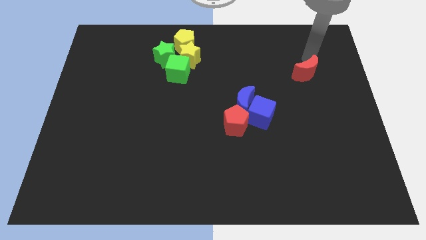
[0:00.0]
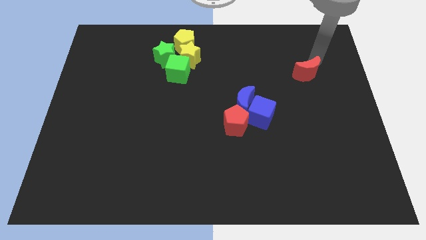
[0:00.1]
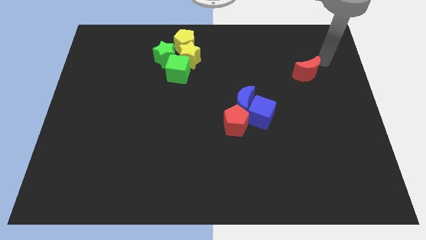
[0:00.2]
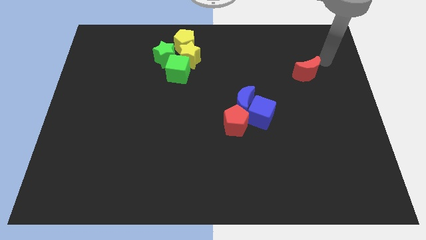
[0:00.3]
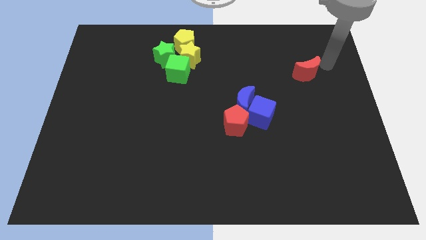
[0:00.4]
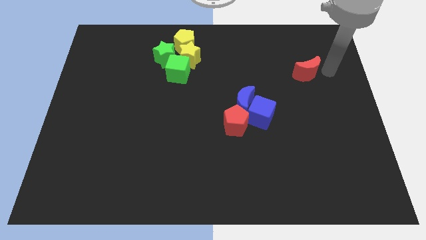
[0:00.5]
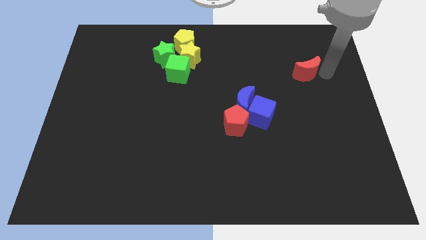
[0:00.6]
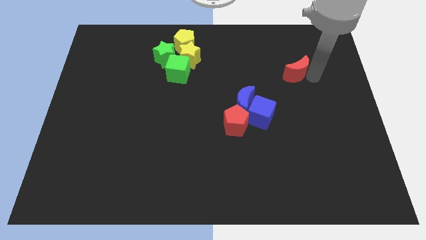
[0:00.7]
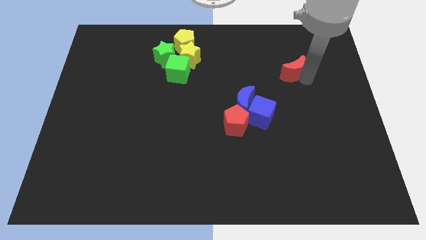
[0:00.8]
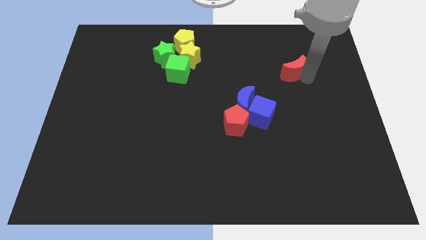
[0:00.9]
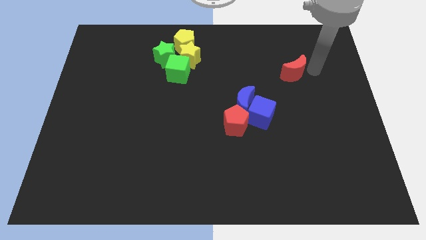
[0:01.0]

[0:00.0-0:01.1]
move red crescent towards blue crescent

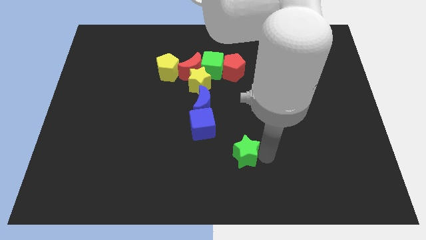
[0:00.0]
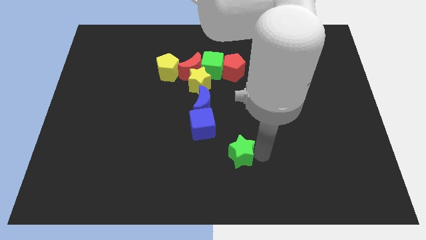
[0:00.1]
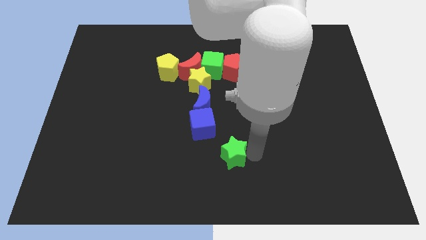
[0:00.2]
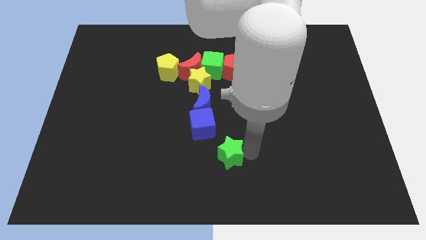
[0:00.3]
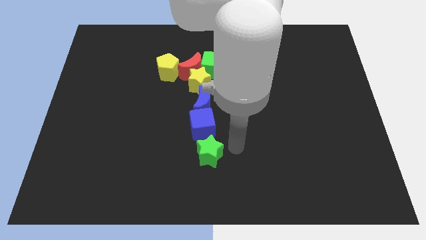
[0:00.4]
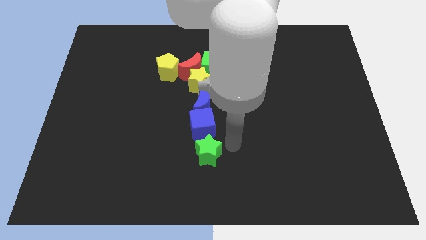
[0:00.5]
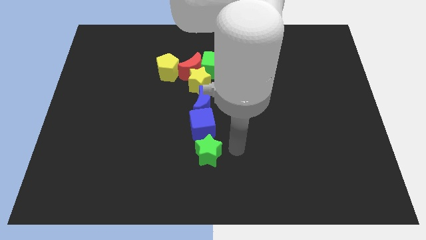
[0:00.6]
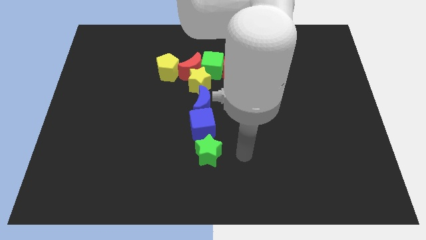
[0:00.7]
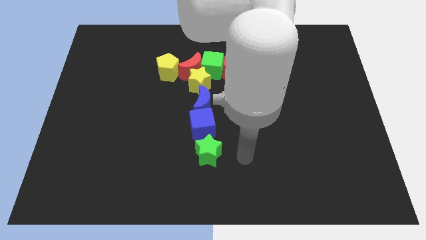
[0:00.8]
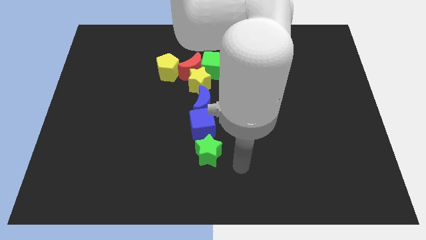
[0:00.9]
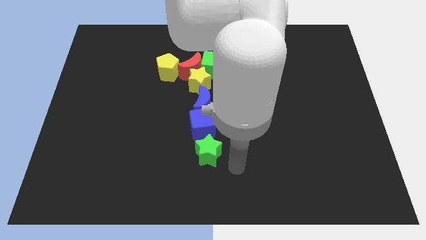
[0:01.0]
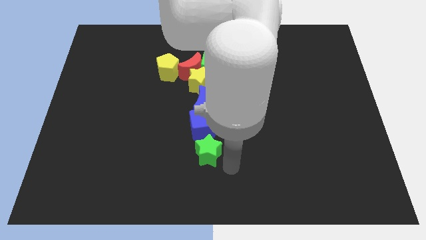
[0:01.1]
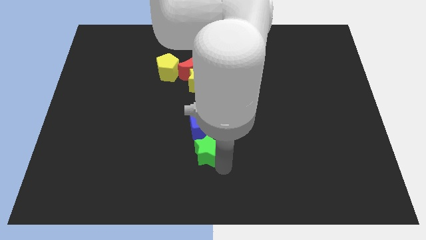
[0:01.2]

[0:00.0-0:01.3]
place green star below blue cube

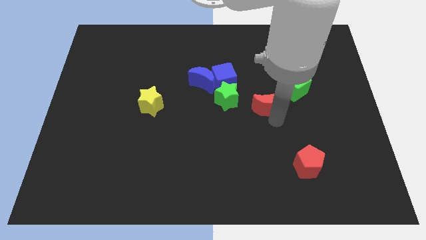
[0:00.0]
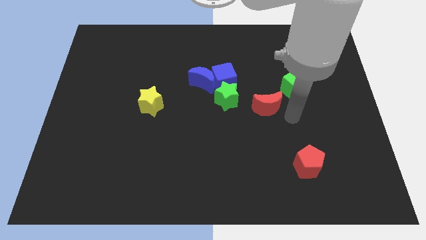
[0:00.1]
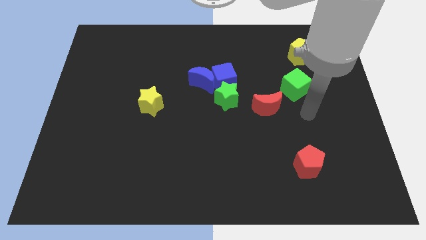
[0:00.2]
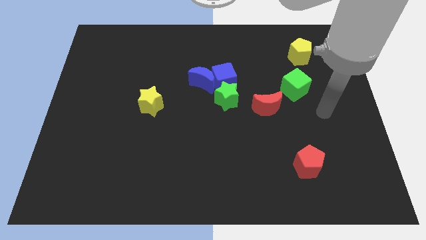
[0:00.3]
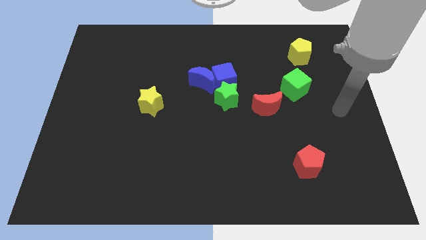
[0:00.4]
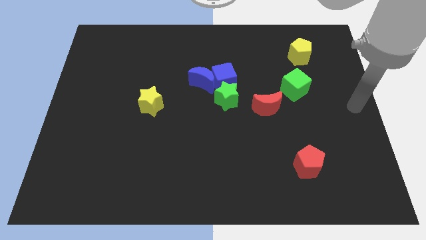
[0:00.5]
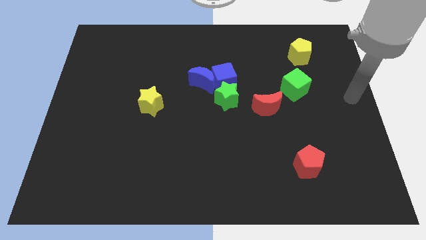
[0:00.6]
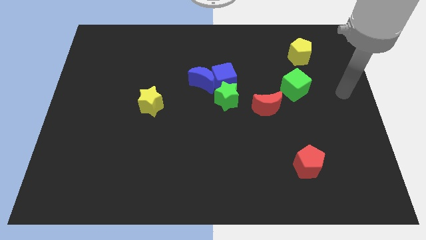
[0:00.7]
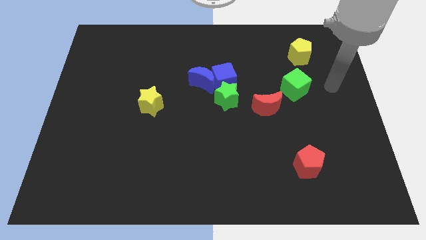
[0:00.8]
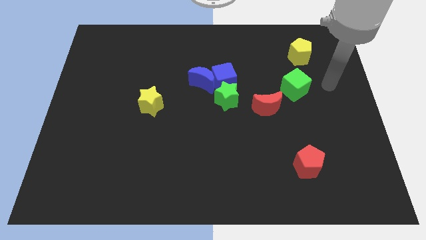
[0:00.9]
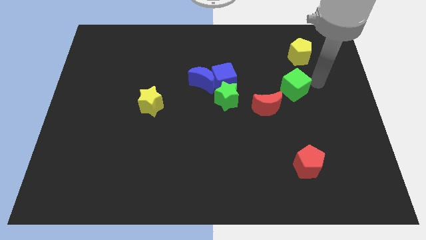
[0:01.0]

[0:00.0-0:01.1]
move your arm to the right of the green cube

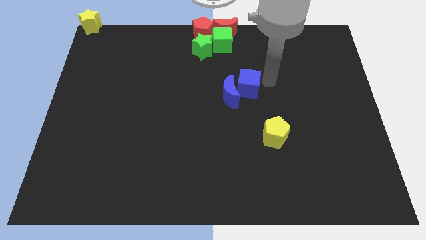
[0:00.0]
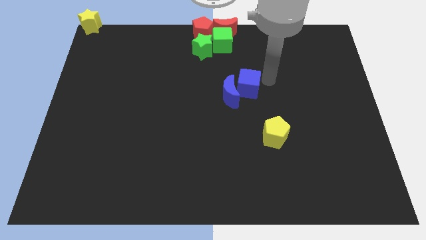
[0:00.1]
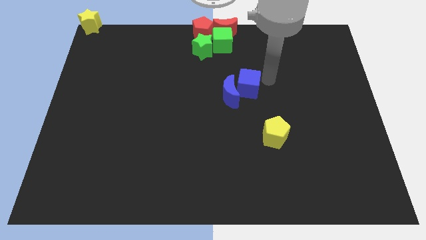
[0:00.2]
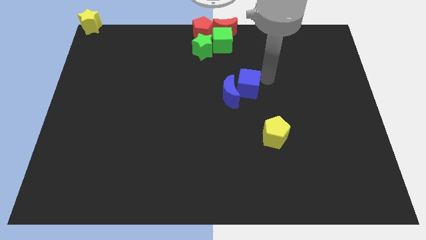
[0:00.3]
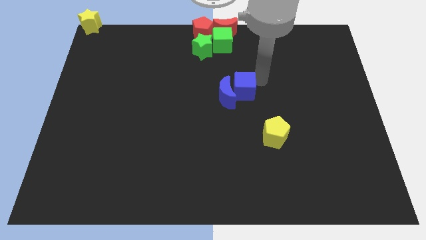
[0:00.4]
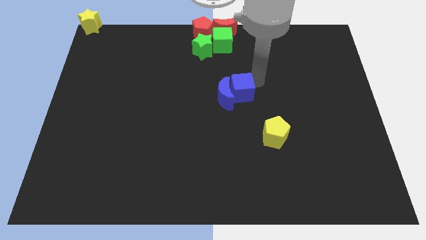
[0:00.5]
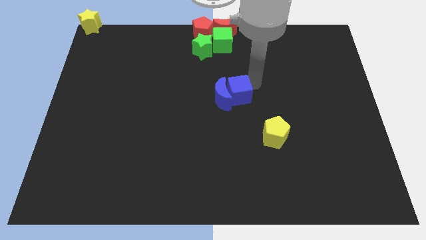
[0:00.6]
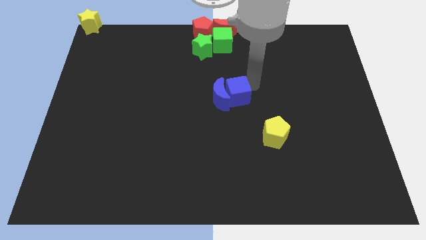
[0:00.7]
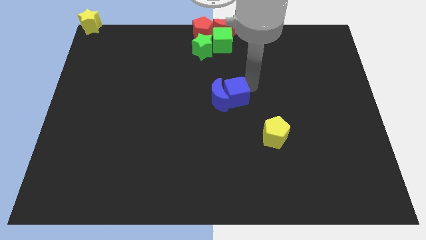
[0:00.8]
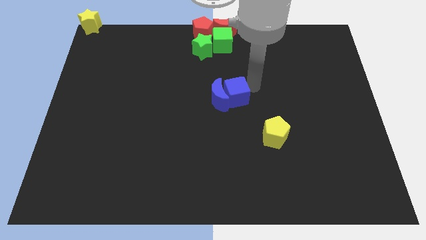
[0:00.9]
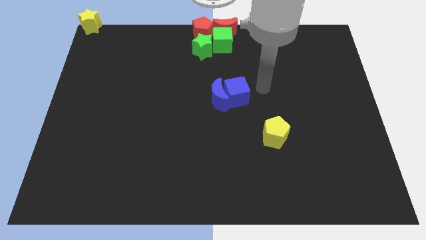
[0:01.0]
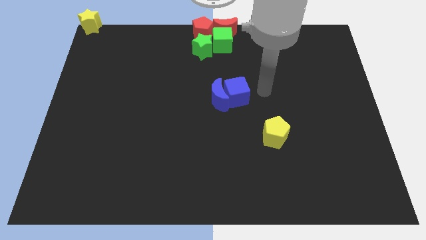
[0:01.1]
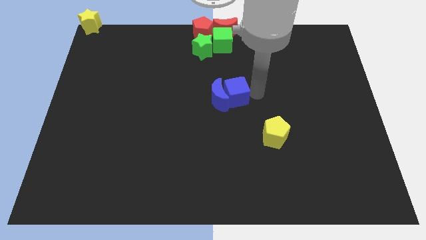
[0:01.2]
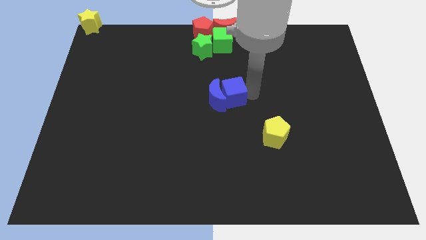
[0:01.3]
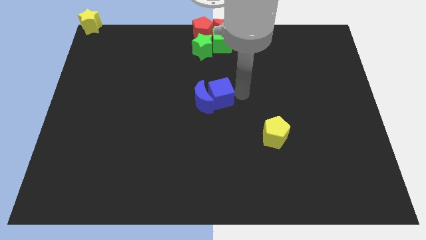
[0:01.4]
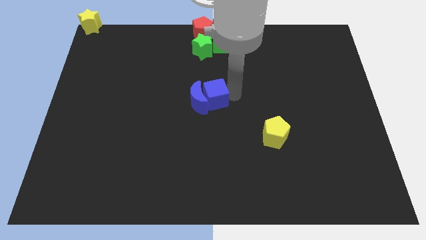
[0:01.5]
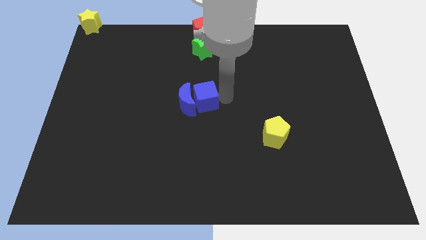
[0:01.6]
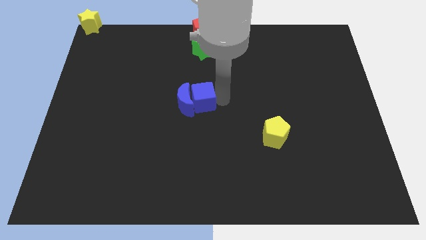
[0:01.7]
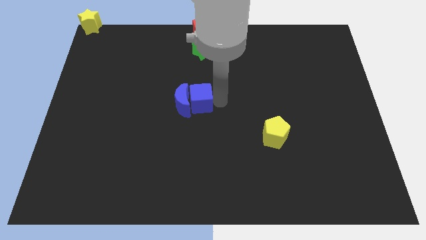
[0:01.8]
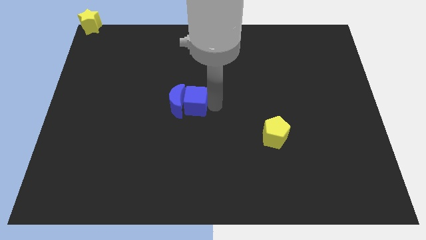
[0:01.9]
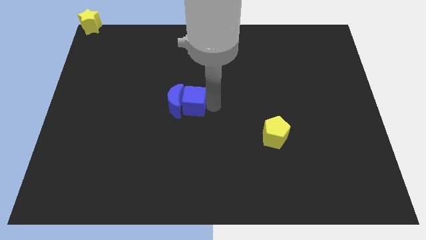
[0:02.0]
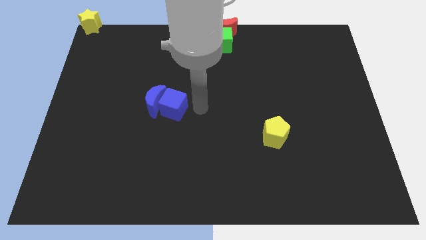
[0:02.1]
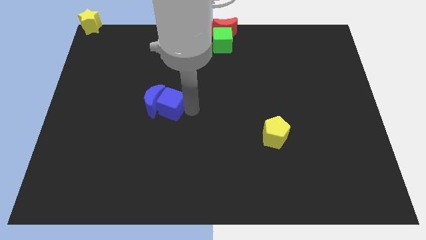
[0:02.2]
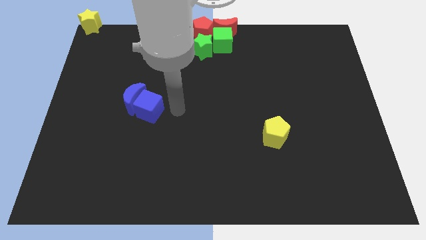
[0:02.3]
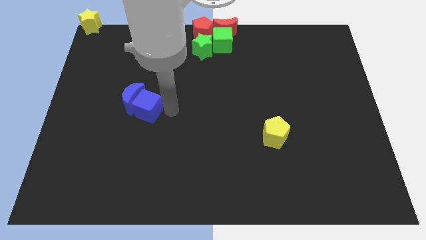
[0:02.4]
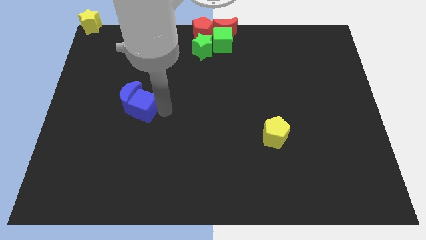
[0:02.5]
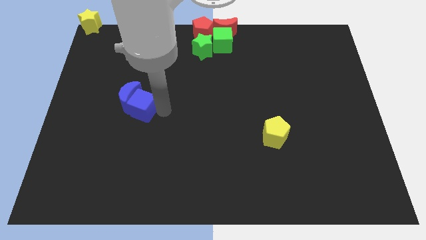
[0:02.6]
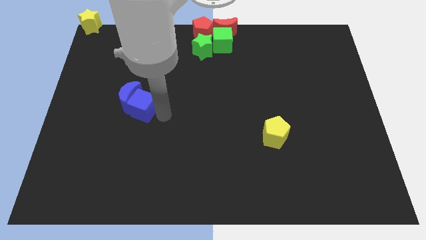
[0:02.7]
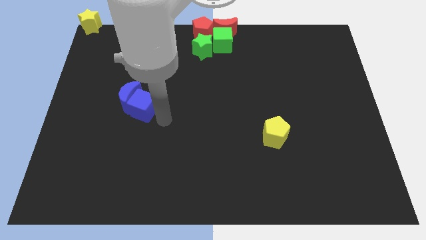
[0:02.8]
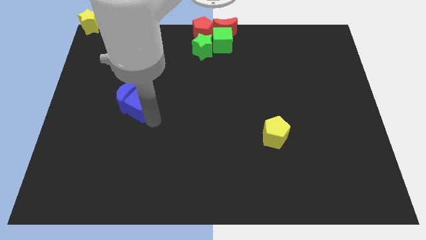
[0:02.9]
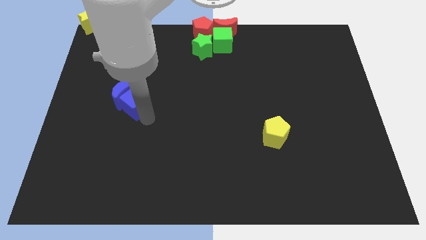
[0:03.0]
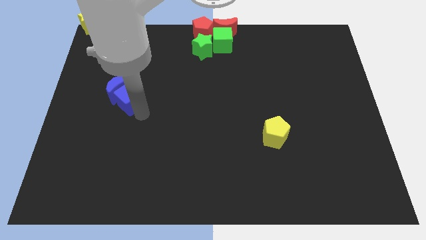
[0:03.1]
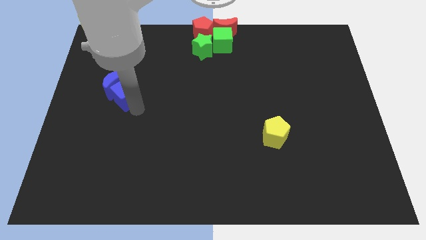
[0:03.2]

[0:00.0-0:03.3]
slide blue blocks towards the center left of board

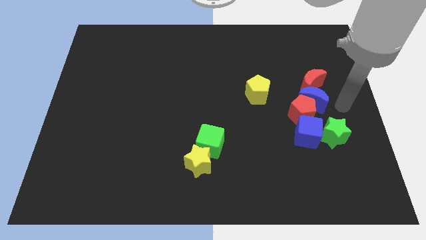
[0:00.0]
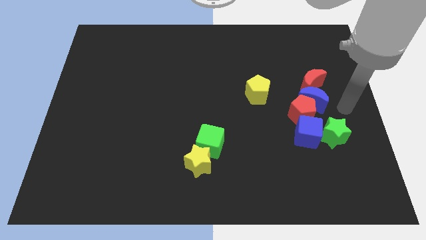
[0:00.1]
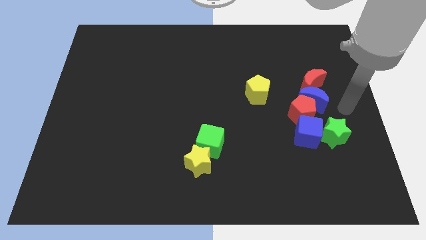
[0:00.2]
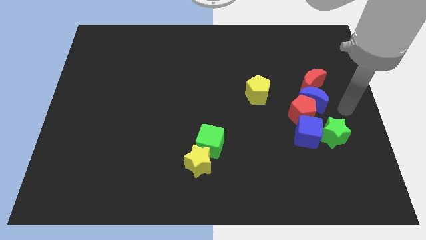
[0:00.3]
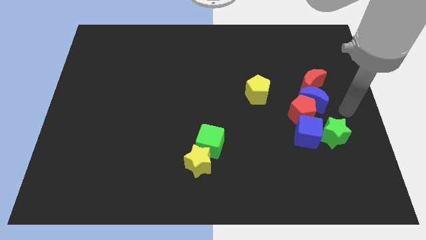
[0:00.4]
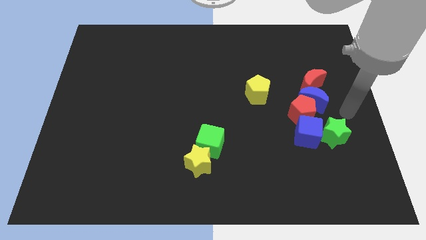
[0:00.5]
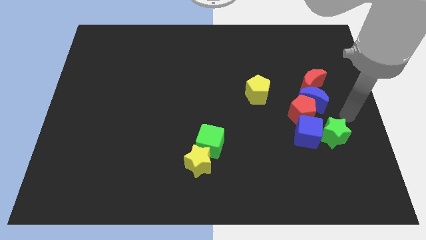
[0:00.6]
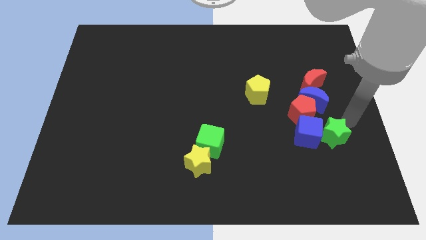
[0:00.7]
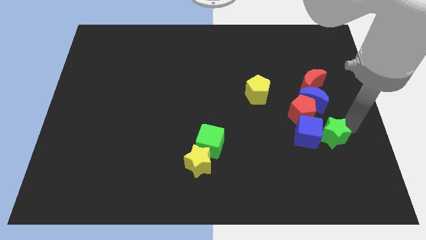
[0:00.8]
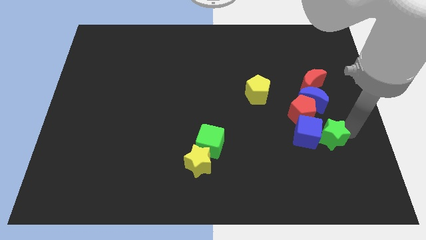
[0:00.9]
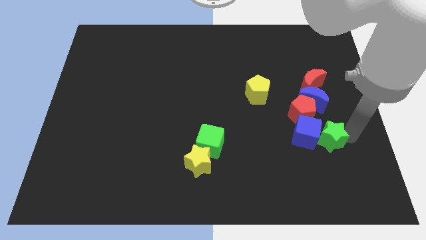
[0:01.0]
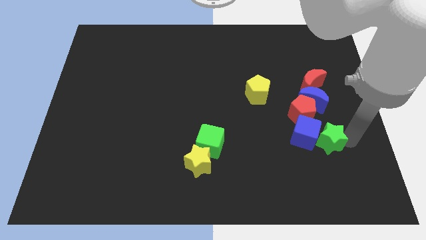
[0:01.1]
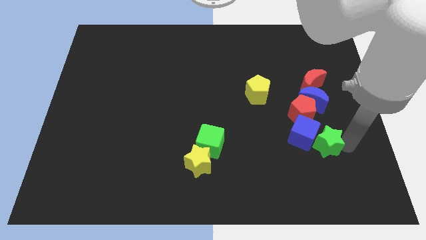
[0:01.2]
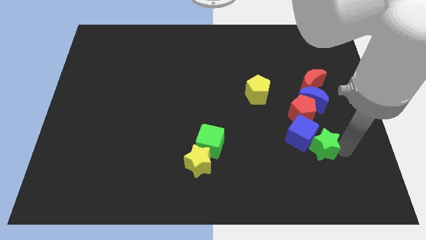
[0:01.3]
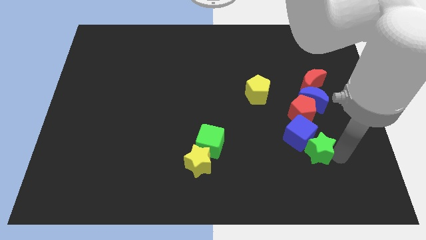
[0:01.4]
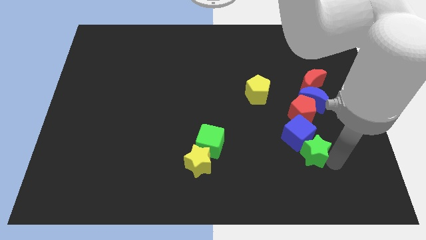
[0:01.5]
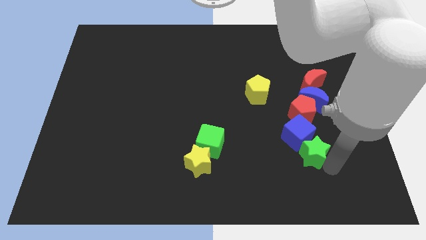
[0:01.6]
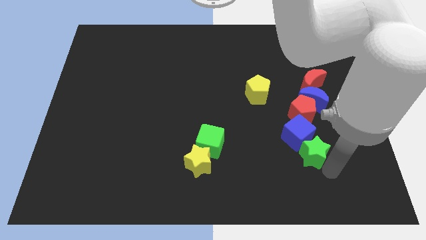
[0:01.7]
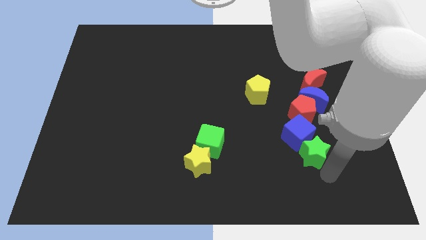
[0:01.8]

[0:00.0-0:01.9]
adjust the green star diagonally bottom right to the blue cube

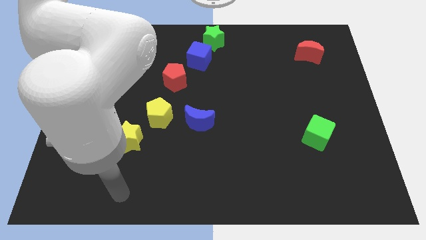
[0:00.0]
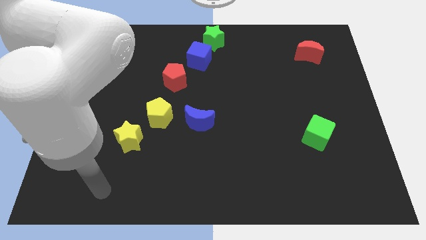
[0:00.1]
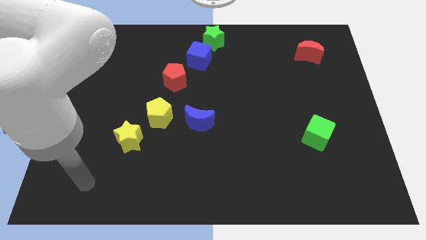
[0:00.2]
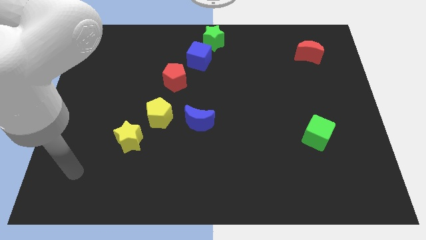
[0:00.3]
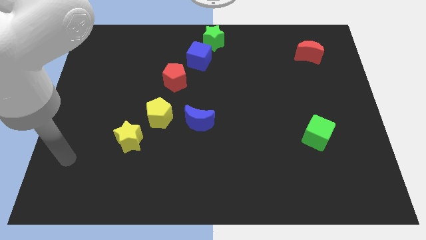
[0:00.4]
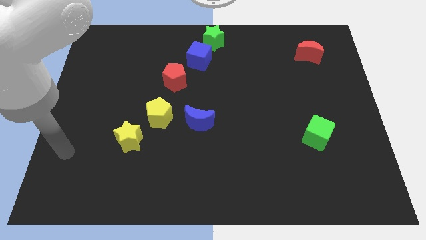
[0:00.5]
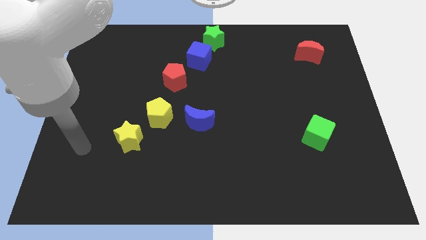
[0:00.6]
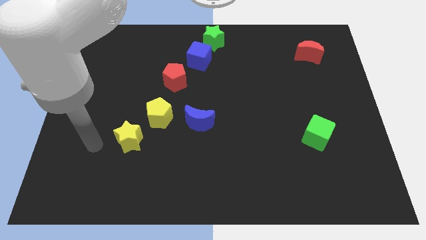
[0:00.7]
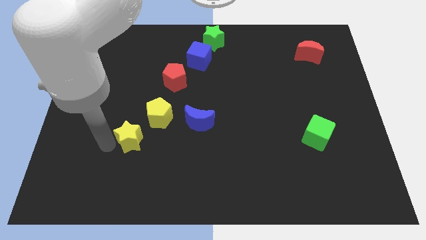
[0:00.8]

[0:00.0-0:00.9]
point the arm to the left of the yellow star
